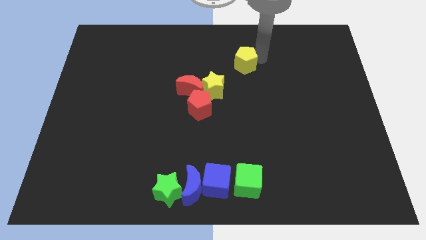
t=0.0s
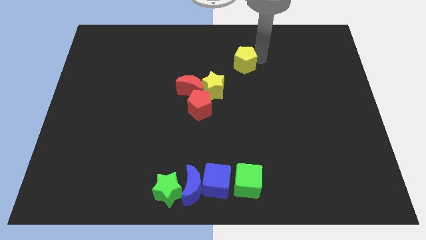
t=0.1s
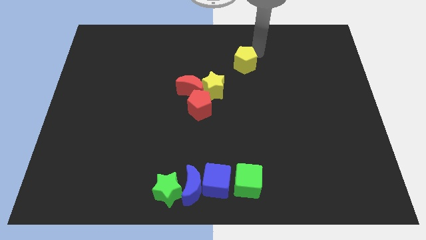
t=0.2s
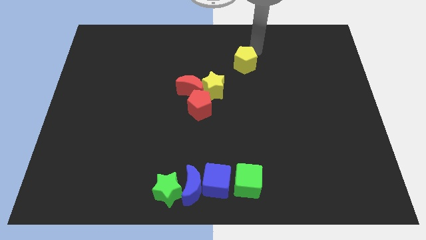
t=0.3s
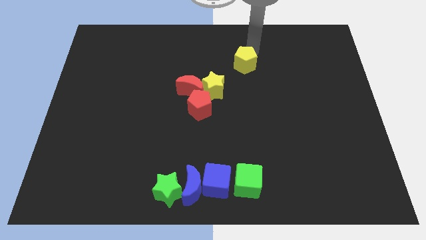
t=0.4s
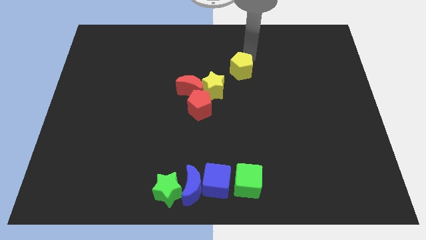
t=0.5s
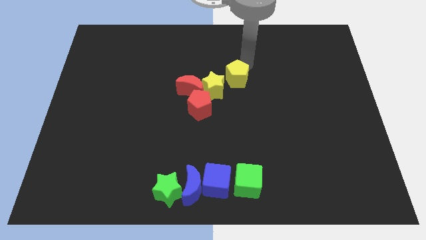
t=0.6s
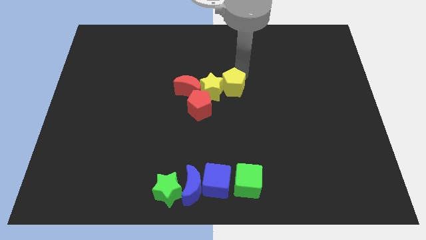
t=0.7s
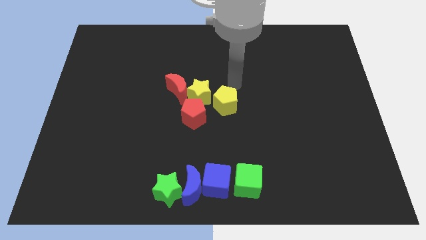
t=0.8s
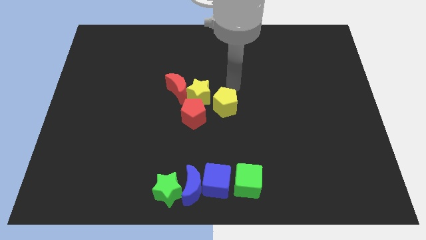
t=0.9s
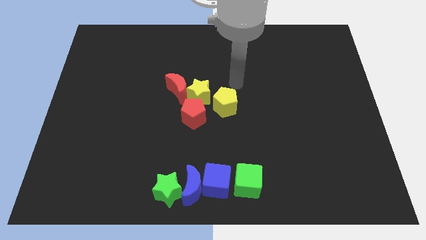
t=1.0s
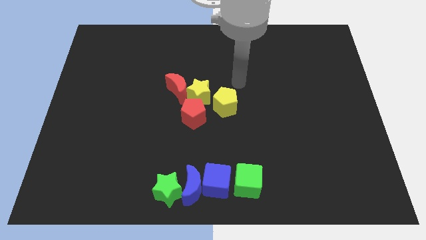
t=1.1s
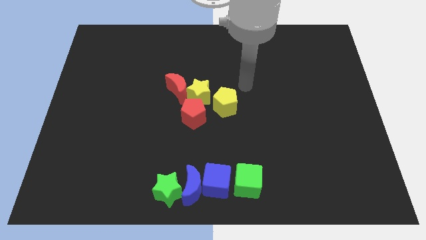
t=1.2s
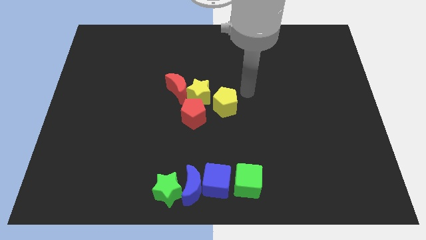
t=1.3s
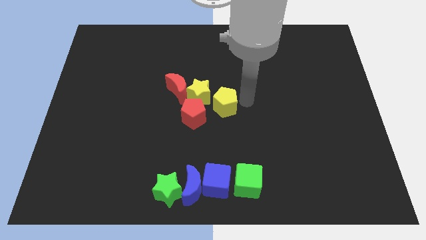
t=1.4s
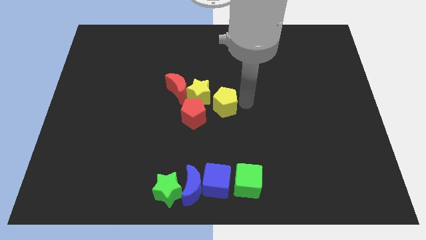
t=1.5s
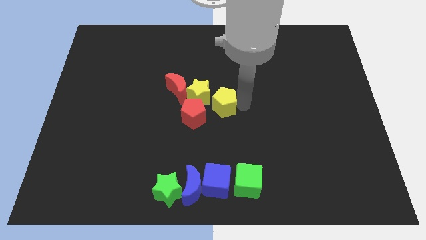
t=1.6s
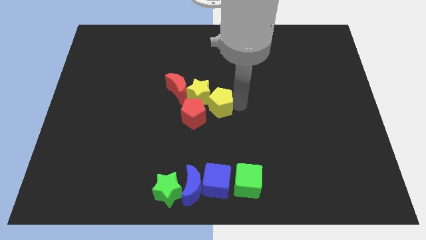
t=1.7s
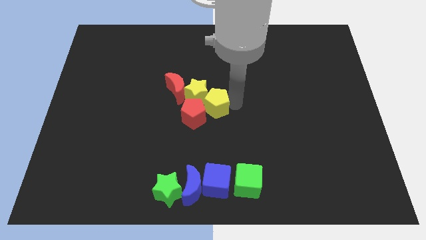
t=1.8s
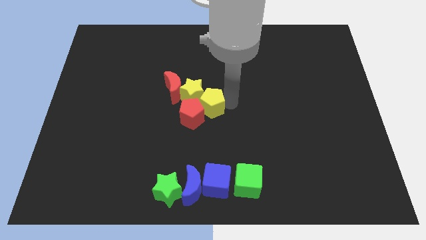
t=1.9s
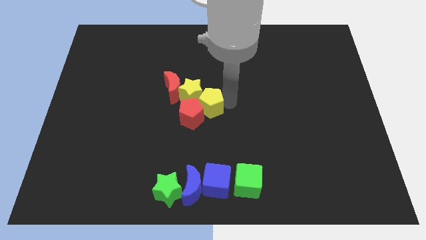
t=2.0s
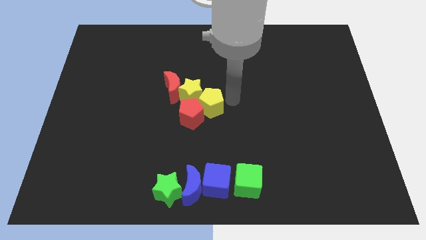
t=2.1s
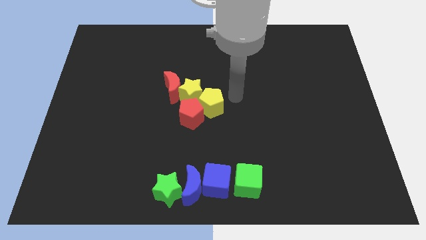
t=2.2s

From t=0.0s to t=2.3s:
make a group of yellow and red blocks

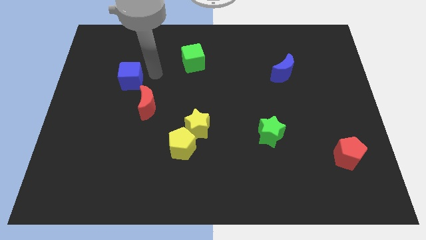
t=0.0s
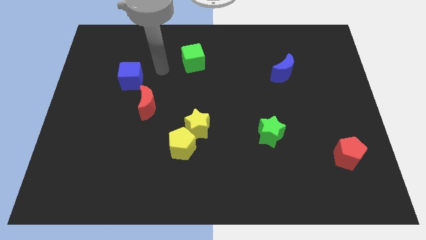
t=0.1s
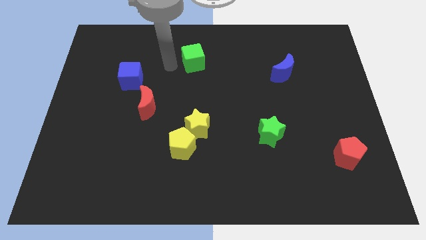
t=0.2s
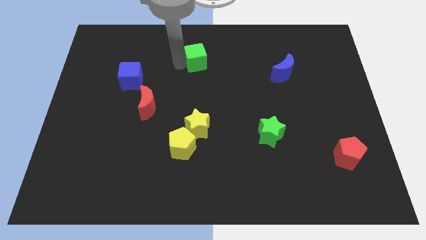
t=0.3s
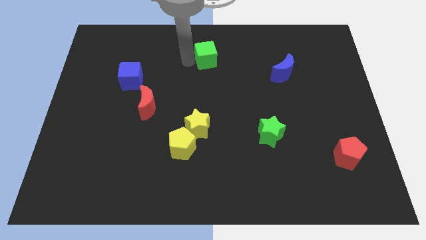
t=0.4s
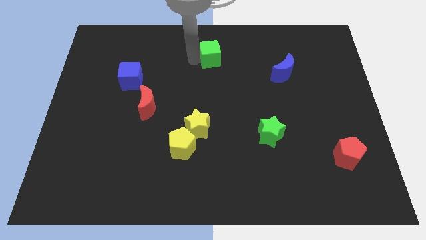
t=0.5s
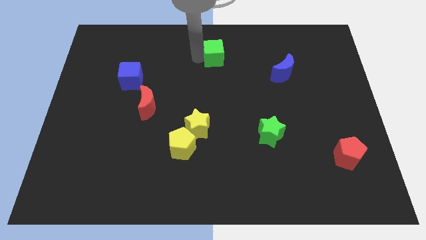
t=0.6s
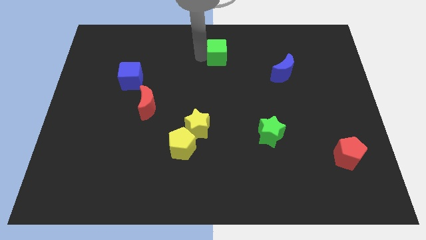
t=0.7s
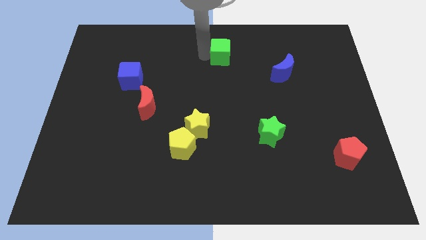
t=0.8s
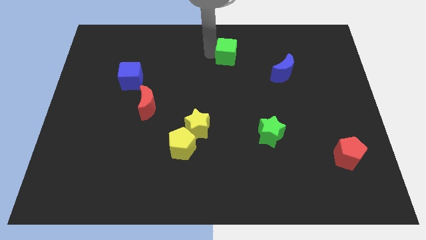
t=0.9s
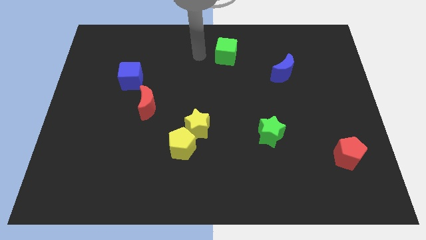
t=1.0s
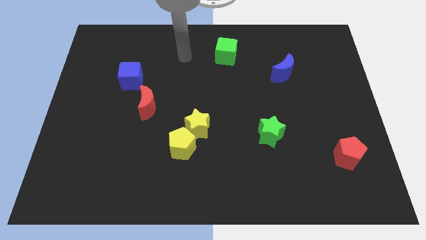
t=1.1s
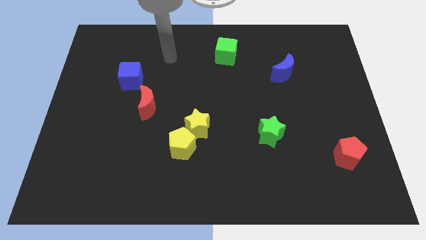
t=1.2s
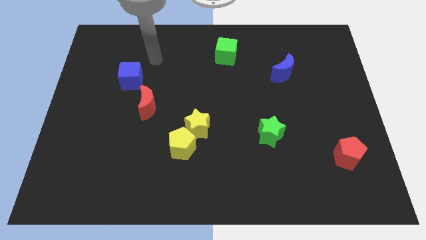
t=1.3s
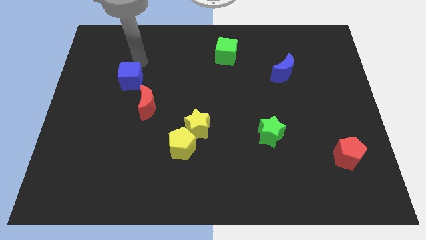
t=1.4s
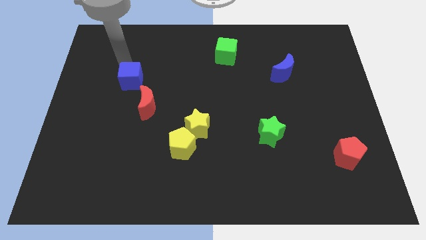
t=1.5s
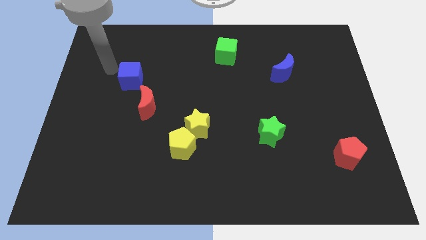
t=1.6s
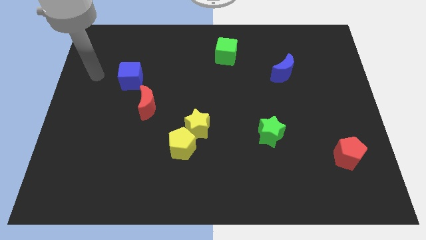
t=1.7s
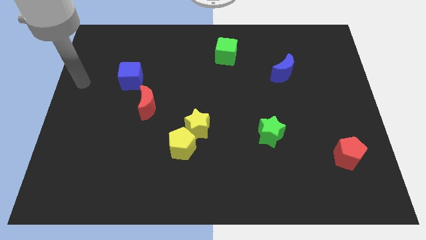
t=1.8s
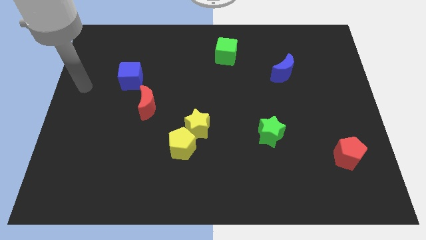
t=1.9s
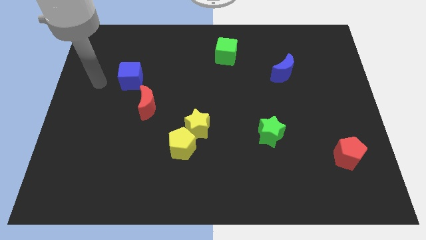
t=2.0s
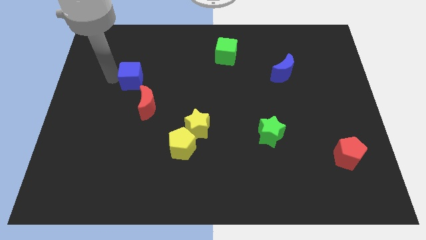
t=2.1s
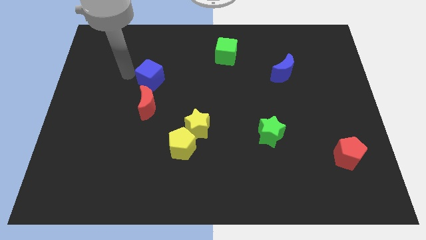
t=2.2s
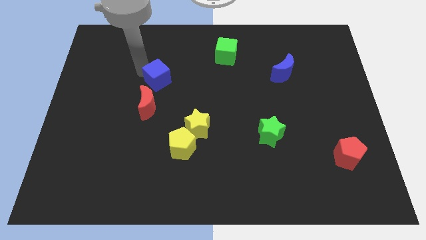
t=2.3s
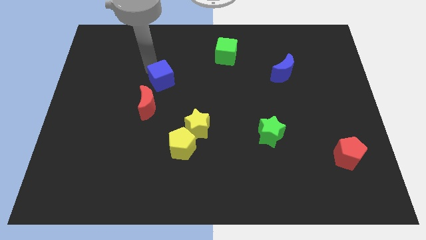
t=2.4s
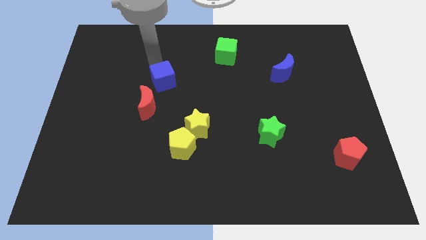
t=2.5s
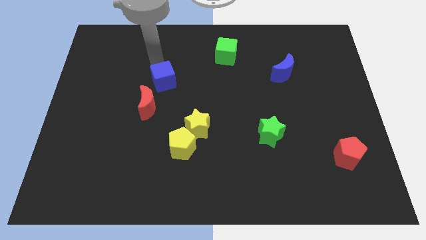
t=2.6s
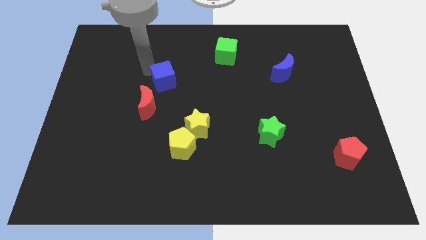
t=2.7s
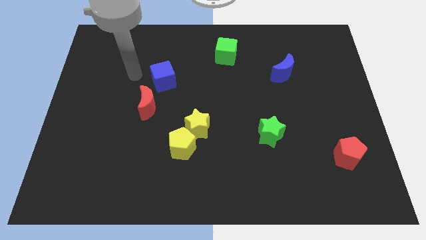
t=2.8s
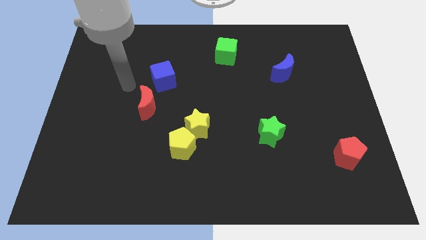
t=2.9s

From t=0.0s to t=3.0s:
move the green cube to the right side of the board

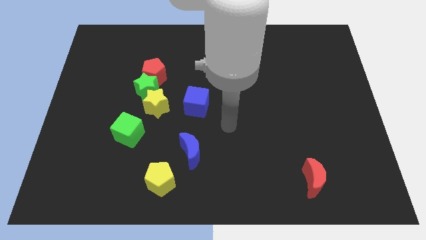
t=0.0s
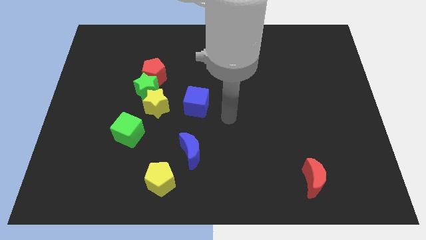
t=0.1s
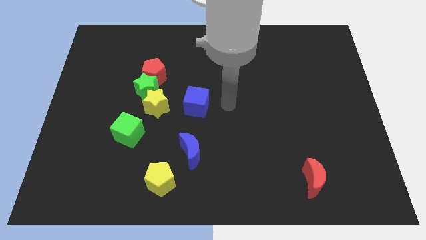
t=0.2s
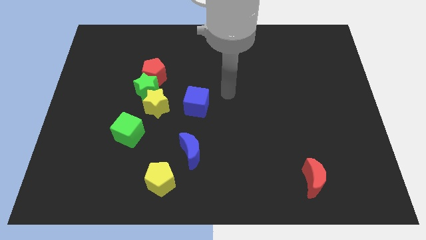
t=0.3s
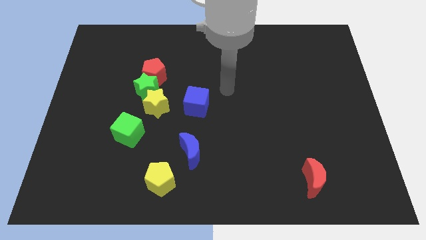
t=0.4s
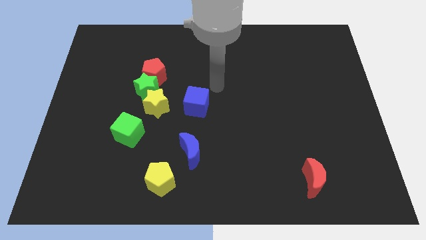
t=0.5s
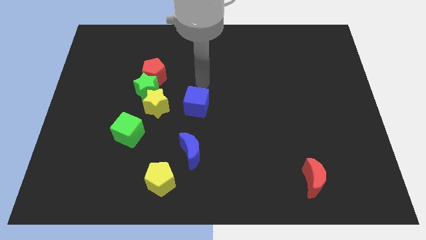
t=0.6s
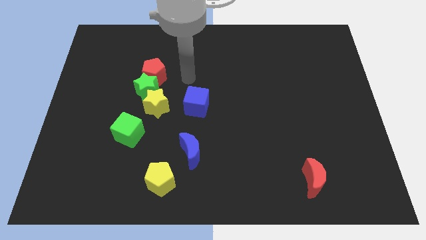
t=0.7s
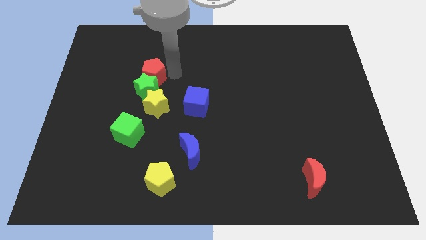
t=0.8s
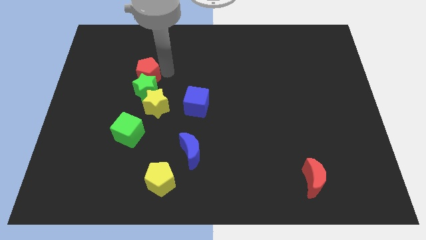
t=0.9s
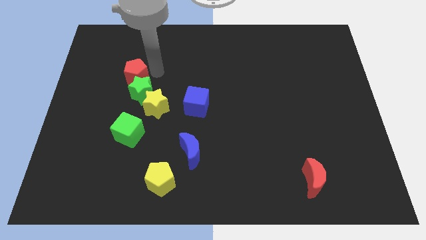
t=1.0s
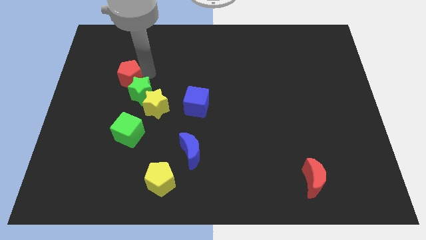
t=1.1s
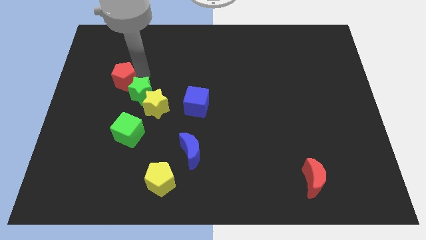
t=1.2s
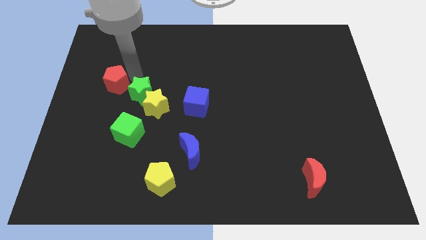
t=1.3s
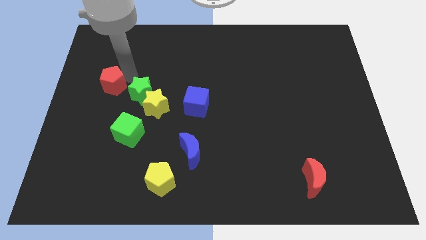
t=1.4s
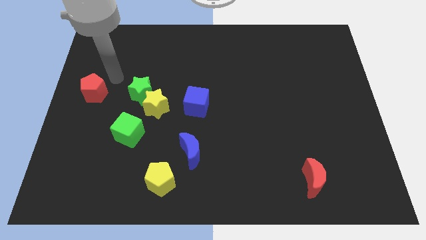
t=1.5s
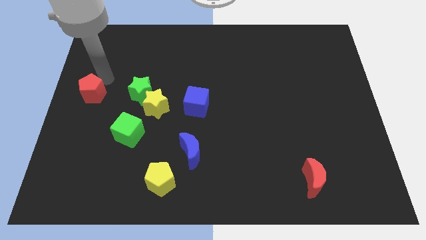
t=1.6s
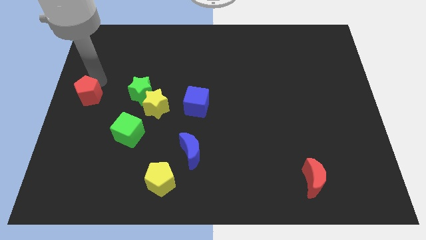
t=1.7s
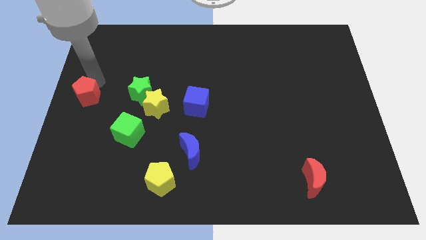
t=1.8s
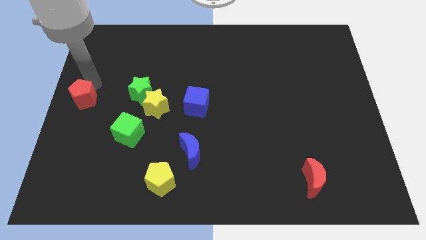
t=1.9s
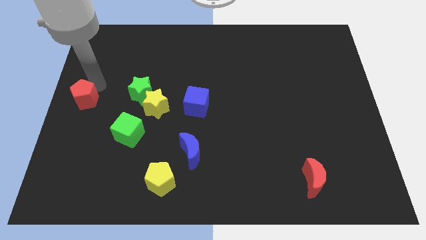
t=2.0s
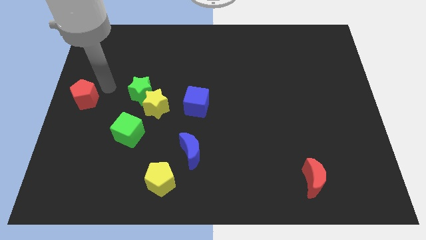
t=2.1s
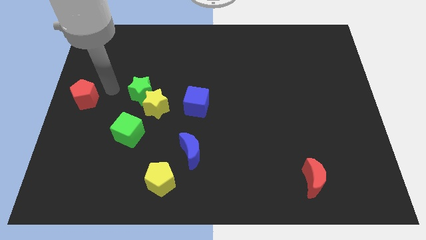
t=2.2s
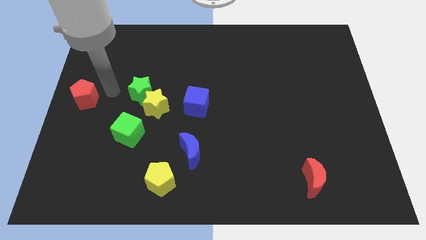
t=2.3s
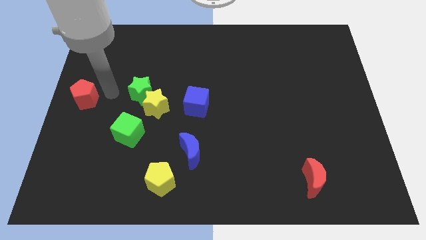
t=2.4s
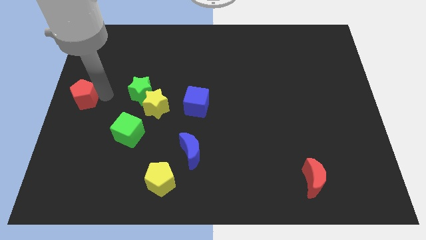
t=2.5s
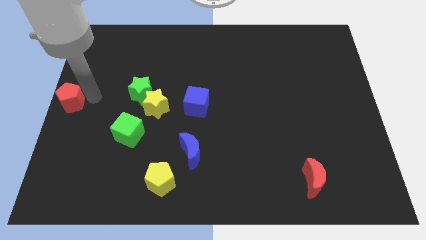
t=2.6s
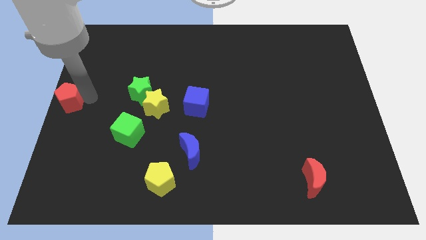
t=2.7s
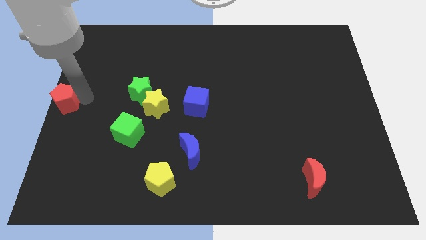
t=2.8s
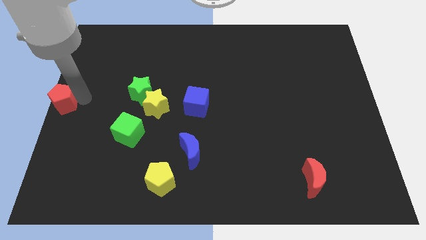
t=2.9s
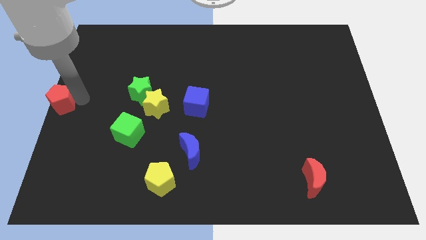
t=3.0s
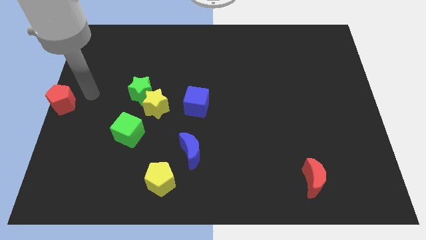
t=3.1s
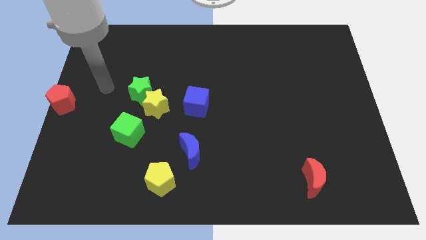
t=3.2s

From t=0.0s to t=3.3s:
move the red pentagon to left center of the board

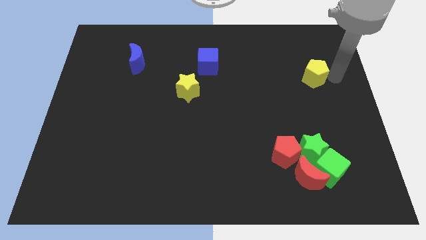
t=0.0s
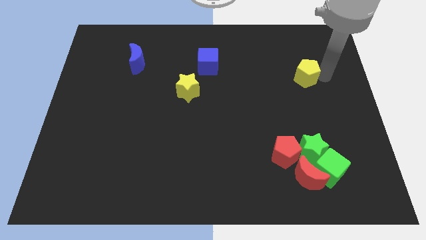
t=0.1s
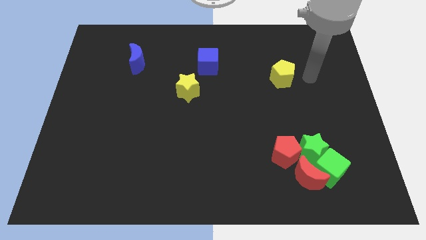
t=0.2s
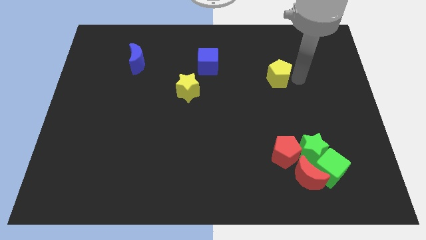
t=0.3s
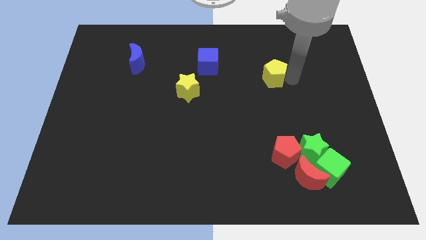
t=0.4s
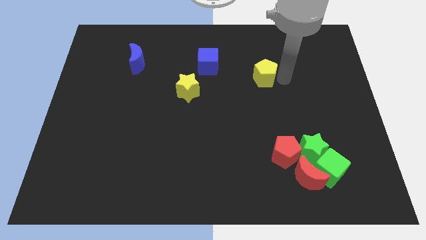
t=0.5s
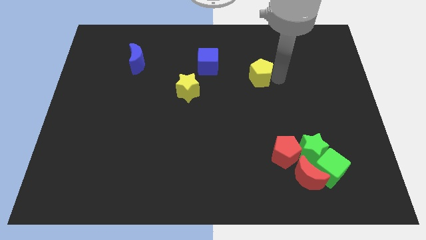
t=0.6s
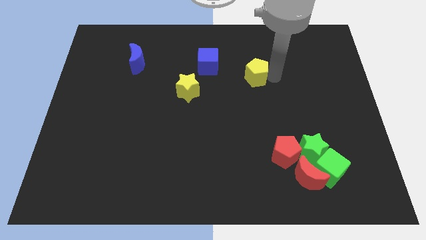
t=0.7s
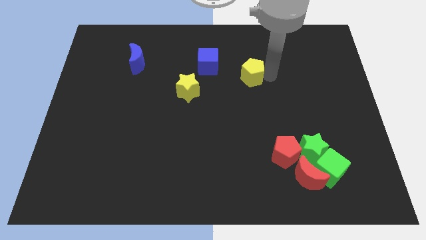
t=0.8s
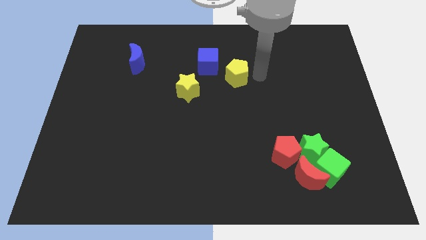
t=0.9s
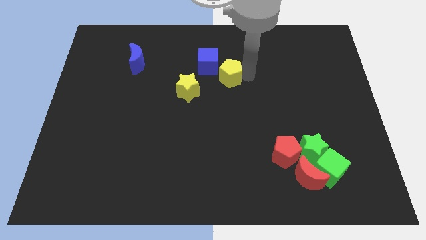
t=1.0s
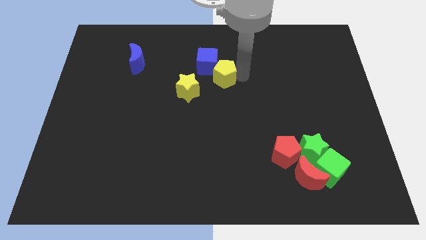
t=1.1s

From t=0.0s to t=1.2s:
push the yellow pentagon at the bottom right side of the blue cube
